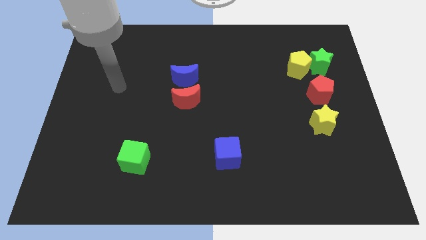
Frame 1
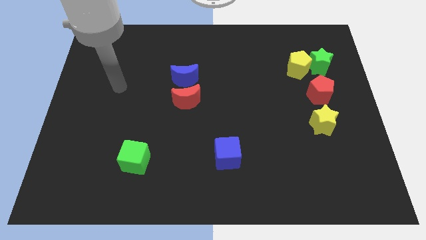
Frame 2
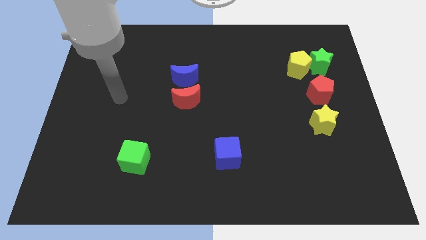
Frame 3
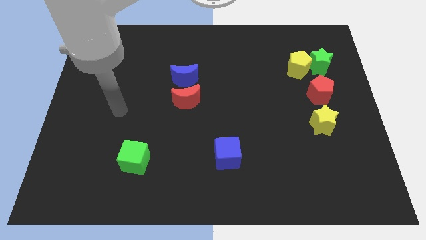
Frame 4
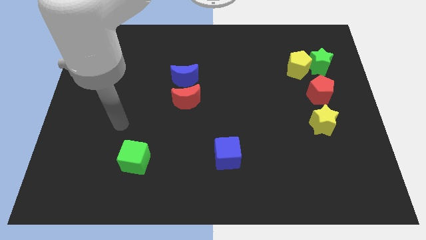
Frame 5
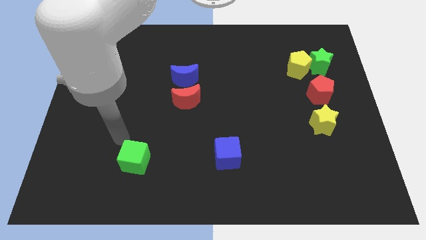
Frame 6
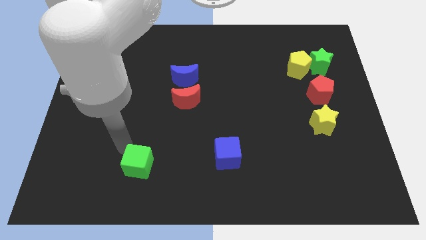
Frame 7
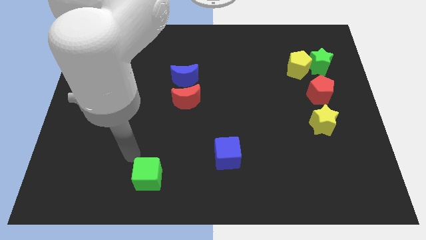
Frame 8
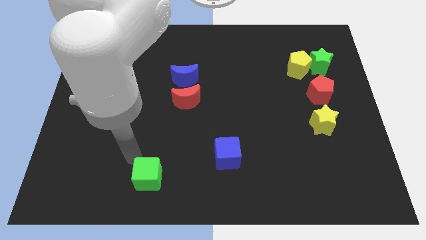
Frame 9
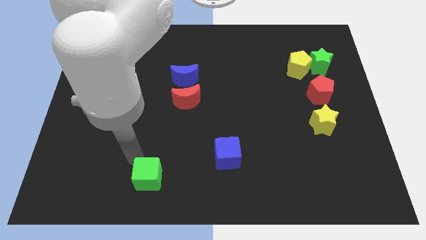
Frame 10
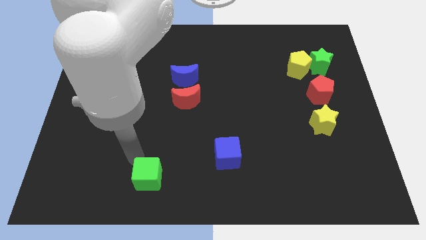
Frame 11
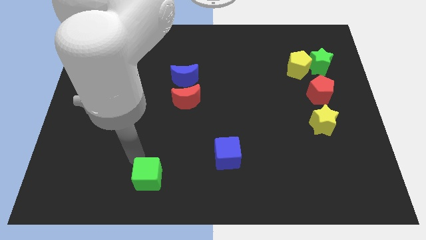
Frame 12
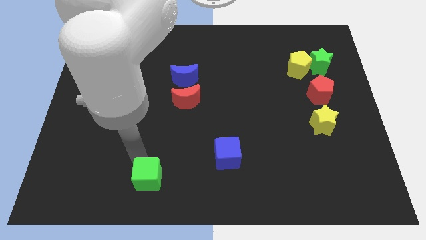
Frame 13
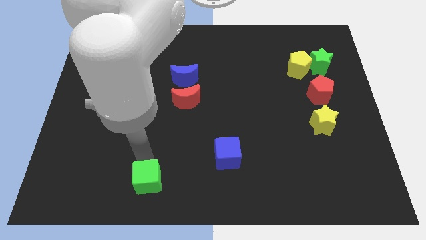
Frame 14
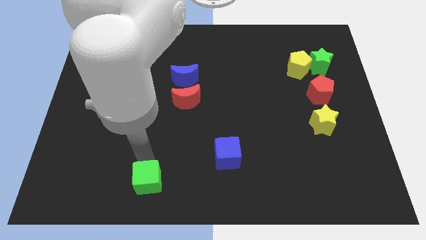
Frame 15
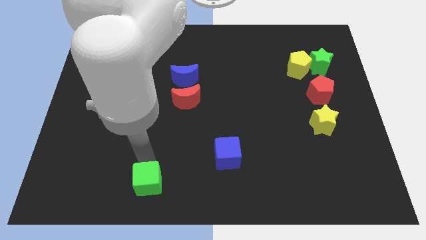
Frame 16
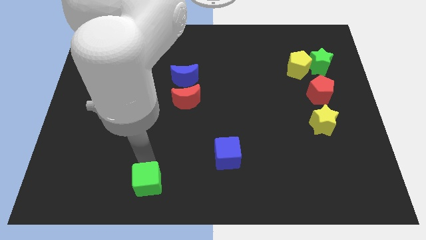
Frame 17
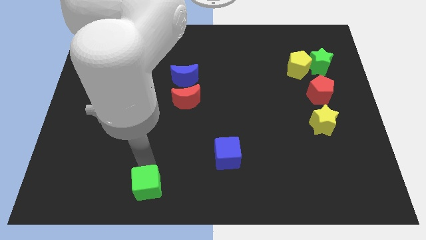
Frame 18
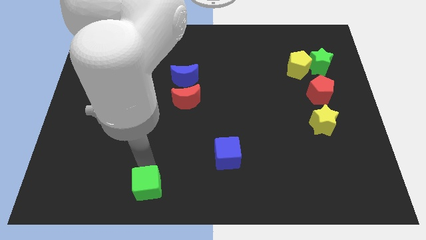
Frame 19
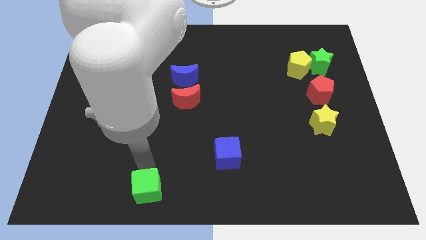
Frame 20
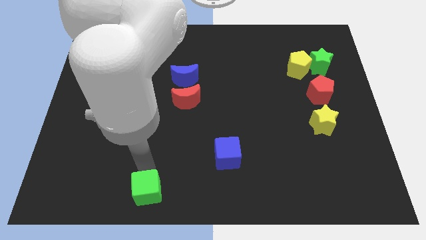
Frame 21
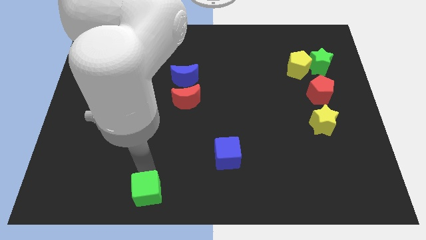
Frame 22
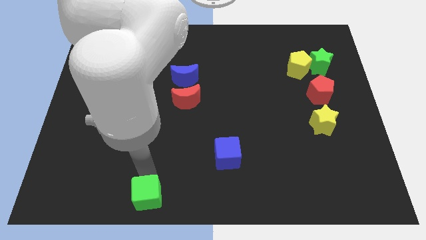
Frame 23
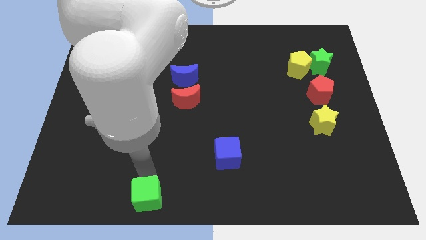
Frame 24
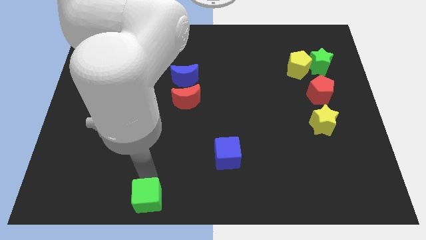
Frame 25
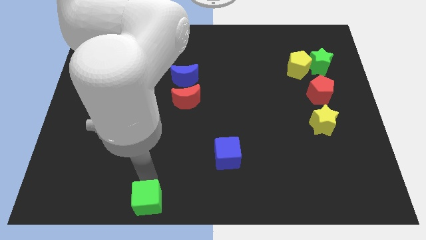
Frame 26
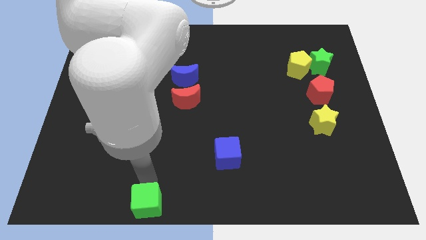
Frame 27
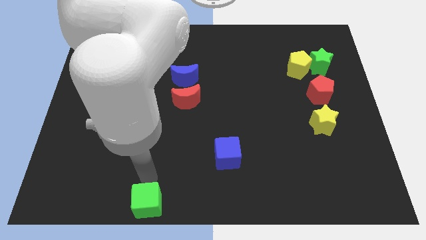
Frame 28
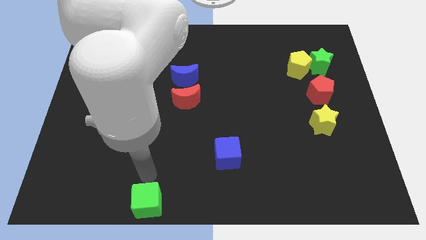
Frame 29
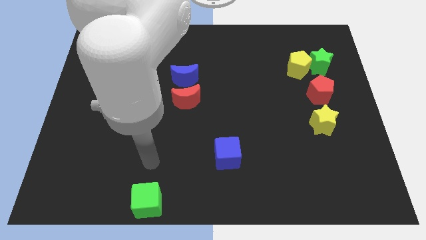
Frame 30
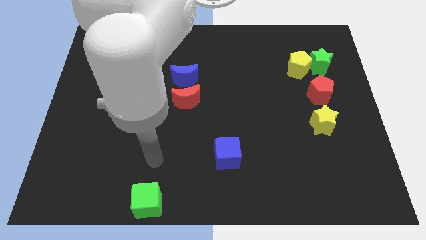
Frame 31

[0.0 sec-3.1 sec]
move the green cube at the bottom side of the table

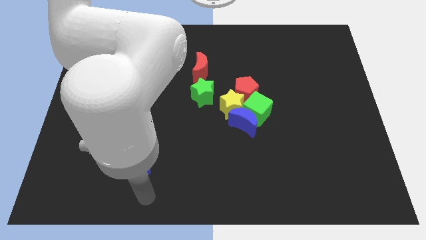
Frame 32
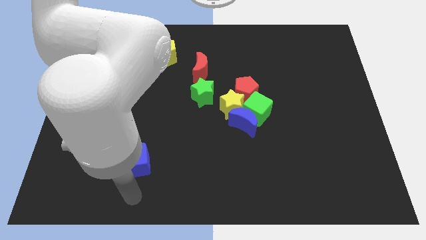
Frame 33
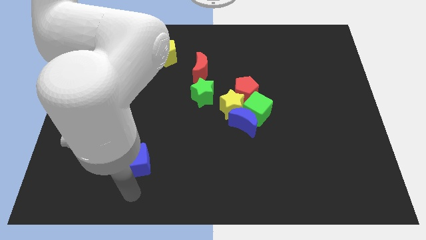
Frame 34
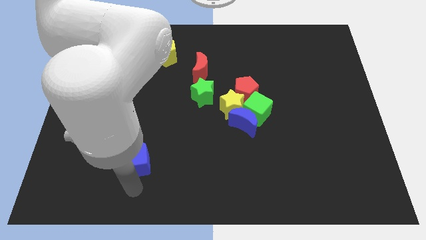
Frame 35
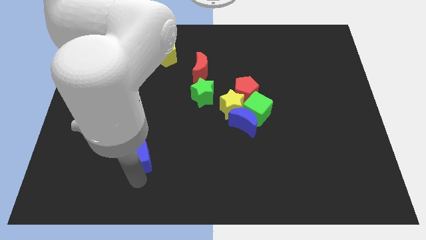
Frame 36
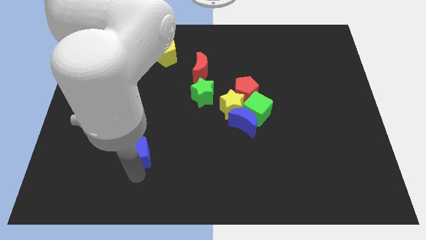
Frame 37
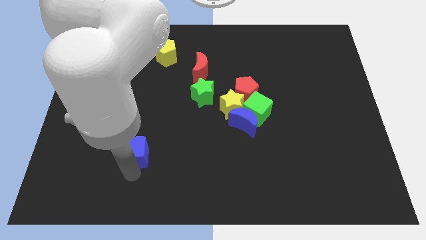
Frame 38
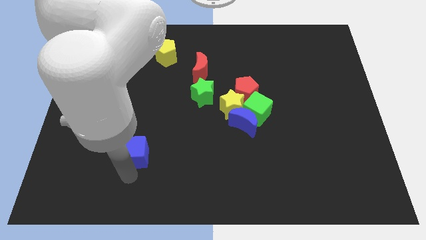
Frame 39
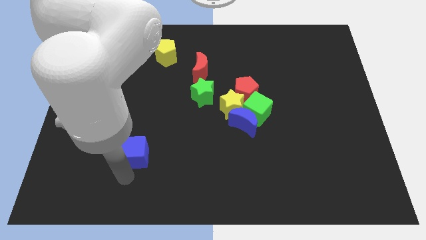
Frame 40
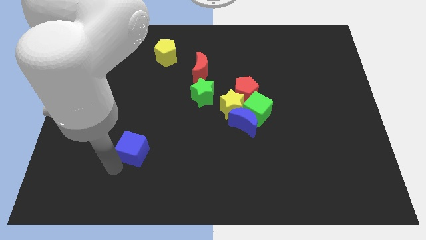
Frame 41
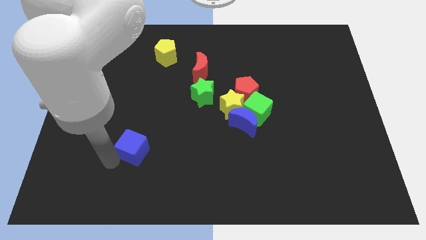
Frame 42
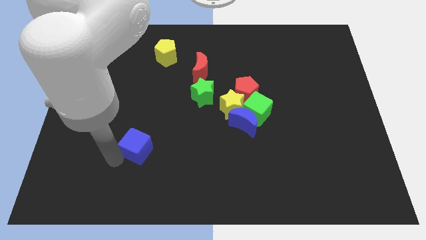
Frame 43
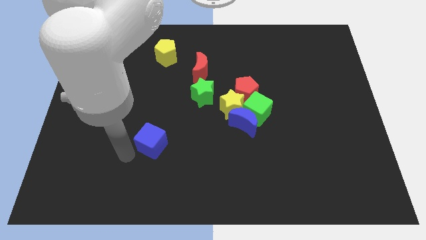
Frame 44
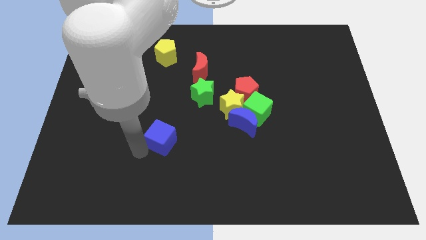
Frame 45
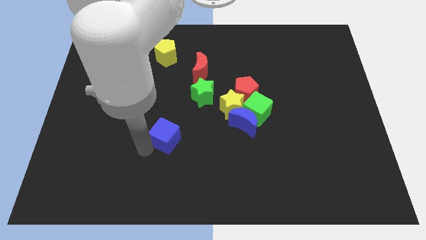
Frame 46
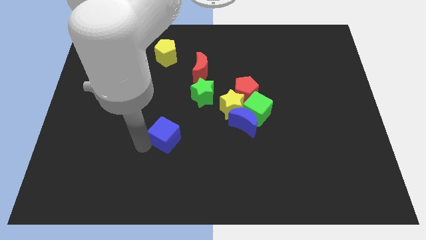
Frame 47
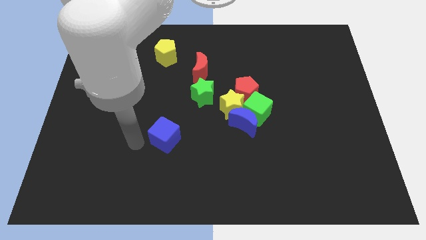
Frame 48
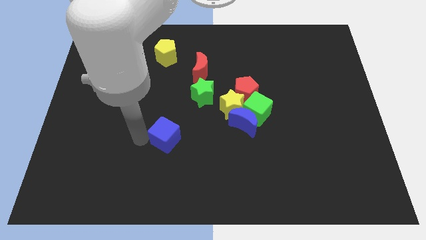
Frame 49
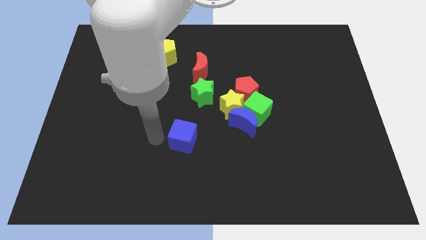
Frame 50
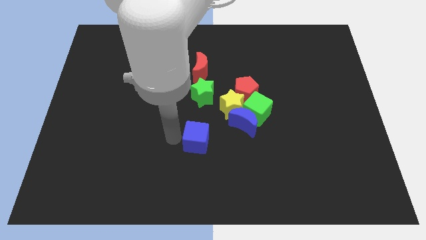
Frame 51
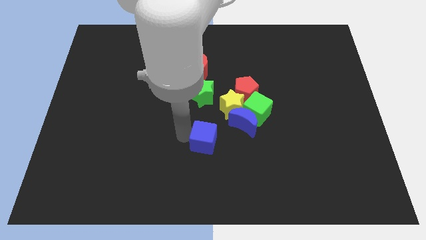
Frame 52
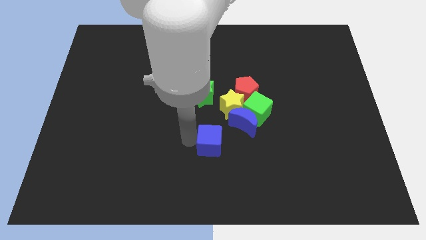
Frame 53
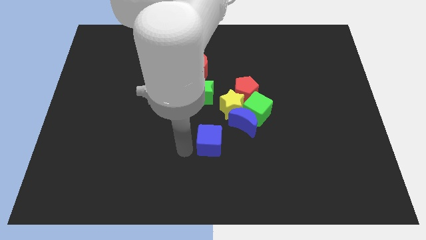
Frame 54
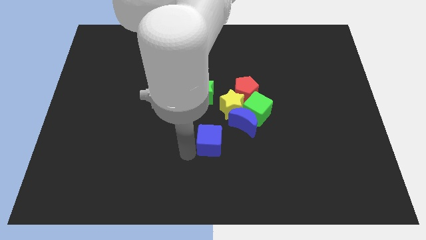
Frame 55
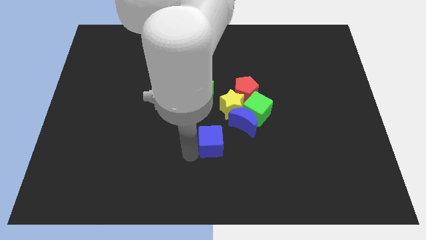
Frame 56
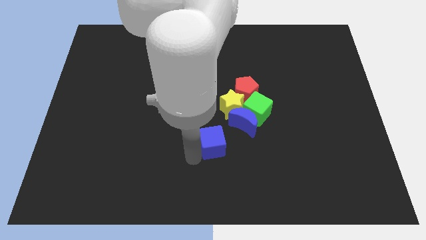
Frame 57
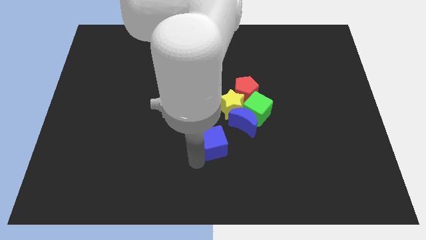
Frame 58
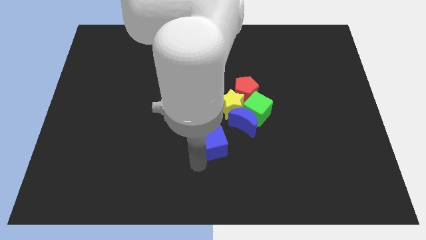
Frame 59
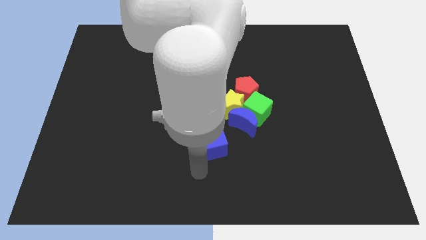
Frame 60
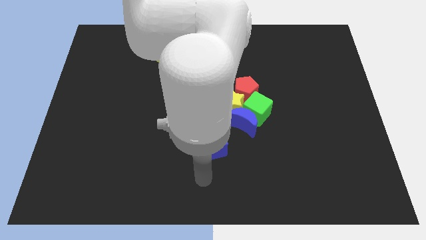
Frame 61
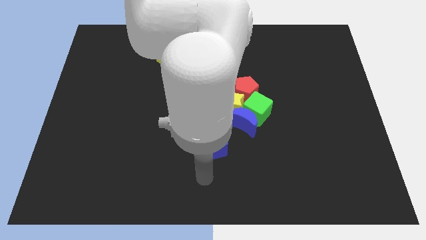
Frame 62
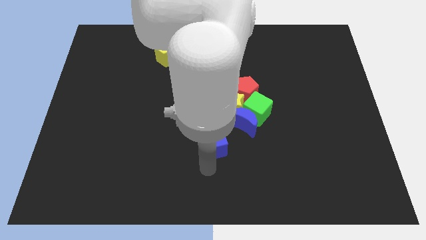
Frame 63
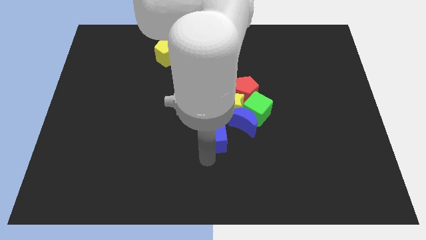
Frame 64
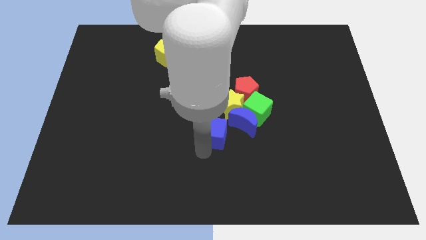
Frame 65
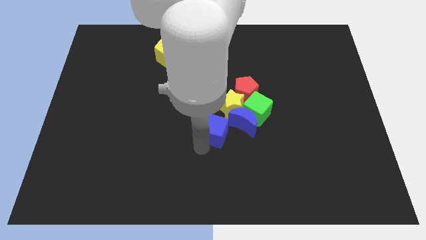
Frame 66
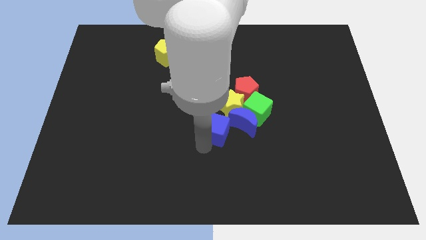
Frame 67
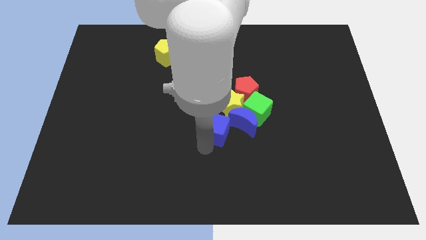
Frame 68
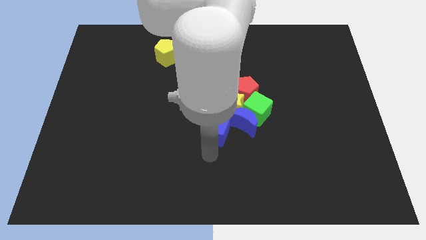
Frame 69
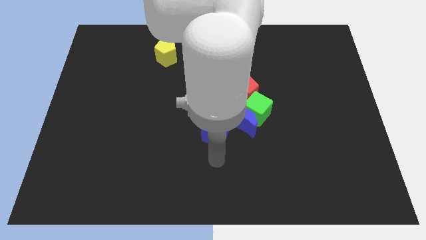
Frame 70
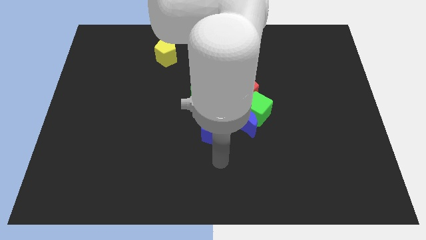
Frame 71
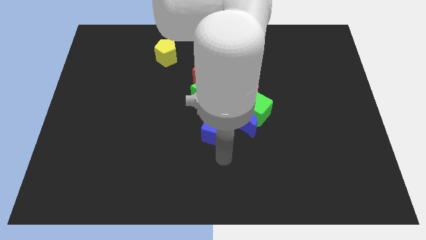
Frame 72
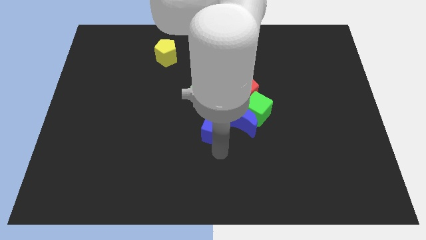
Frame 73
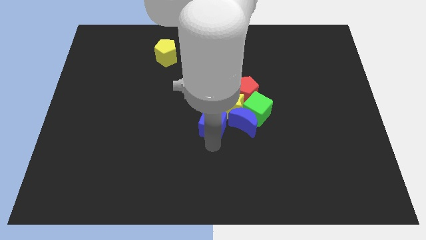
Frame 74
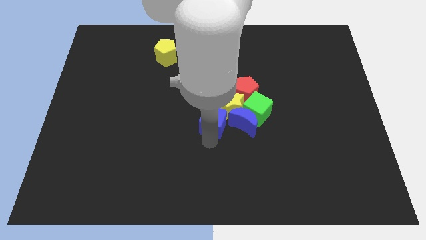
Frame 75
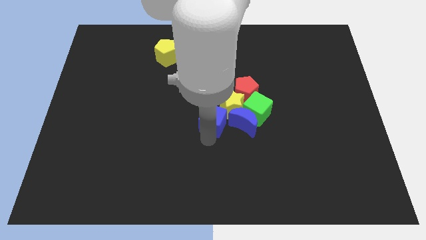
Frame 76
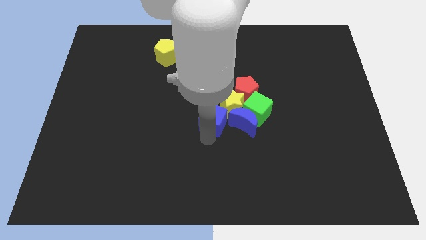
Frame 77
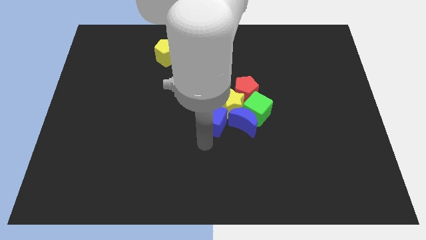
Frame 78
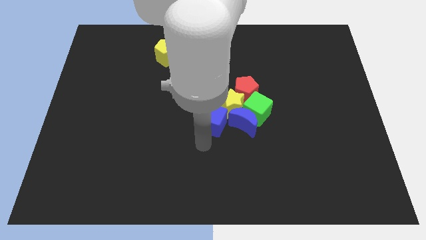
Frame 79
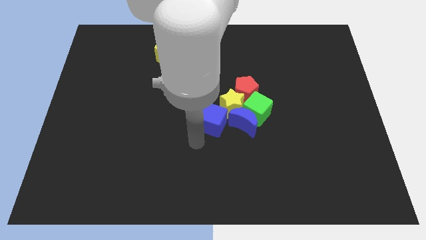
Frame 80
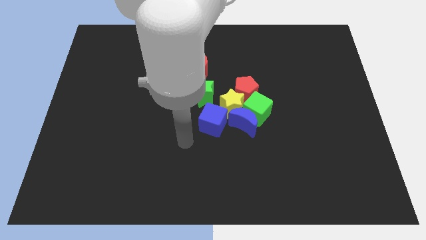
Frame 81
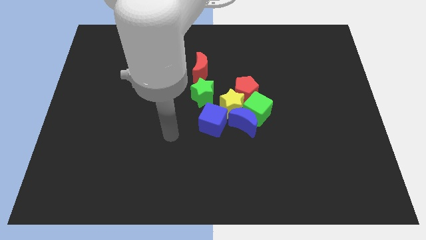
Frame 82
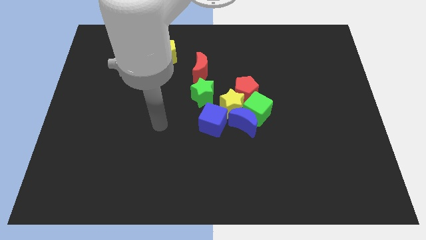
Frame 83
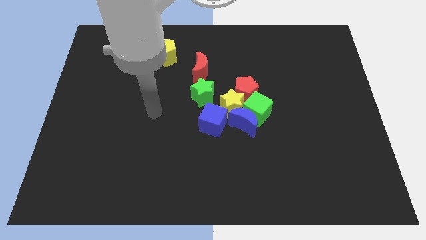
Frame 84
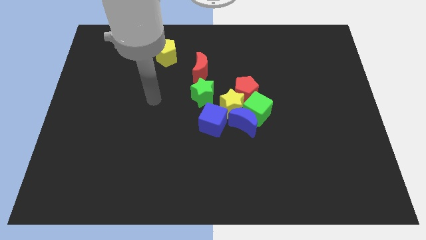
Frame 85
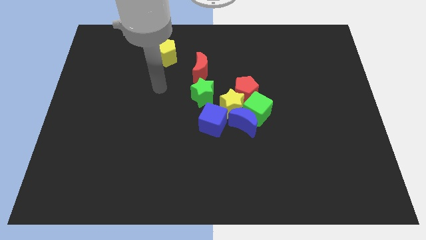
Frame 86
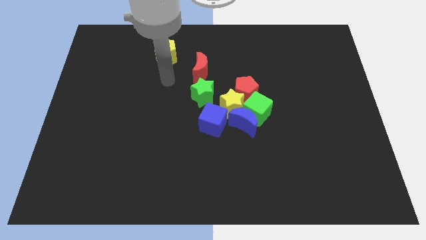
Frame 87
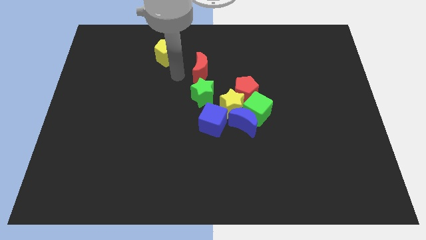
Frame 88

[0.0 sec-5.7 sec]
push the blue cube to the center of the board
